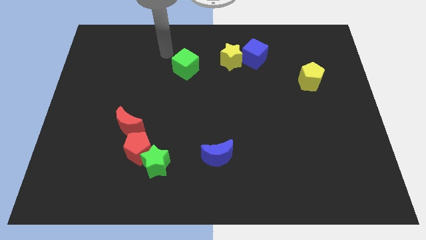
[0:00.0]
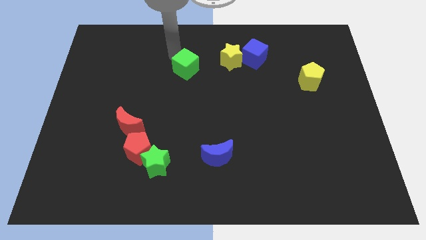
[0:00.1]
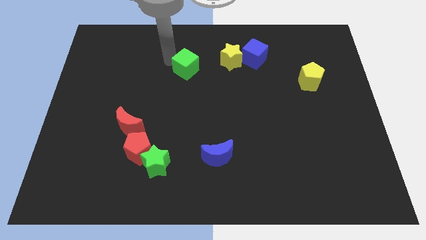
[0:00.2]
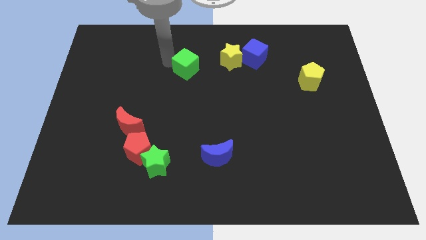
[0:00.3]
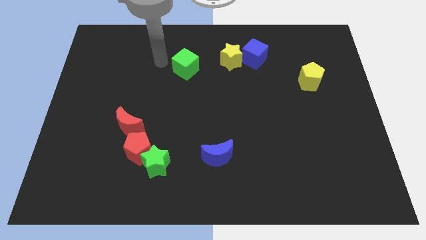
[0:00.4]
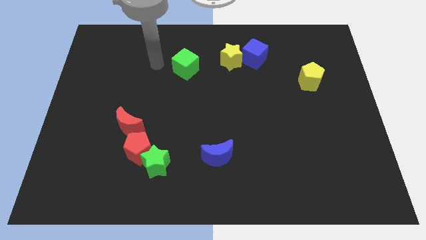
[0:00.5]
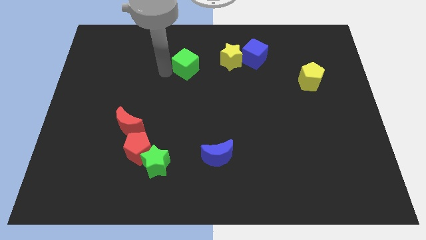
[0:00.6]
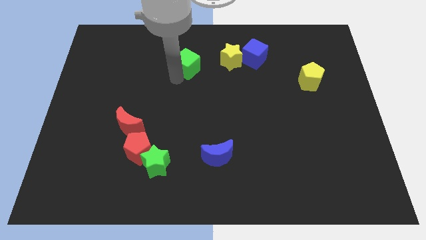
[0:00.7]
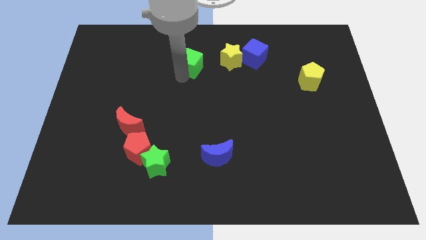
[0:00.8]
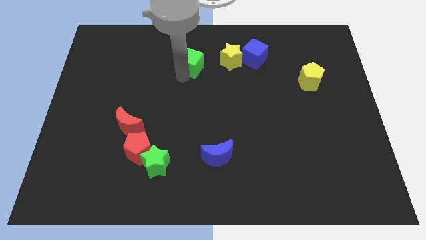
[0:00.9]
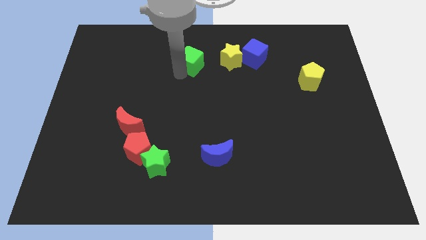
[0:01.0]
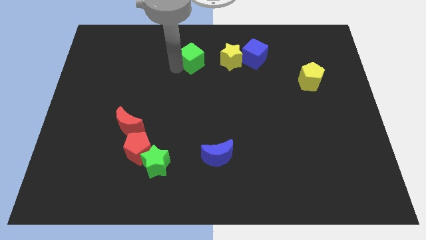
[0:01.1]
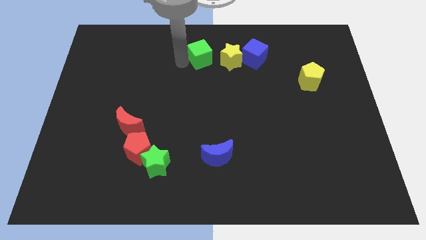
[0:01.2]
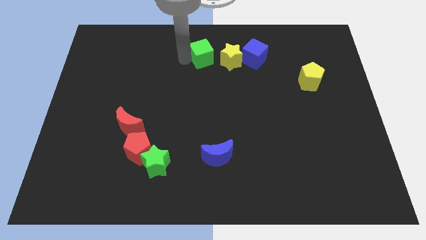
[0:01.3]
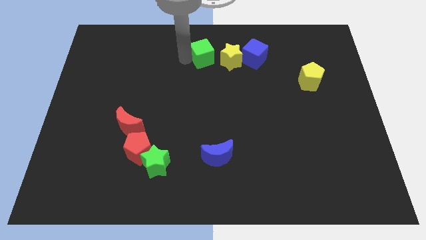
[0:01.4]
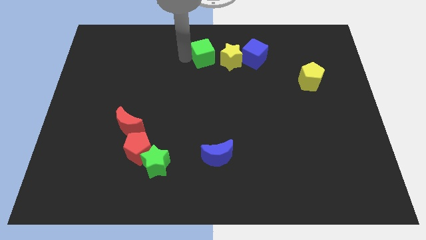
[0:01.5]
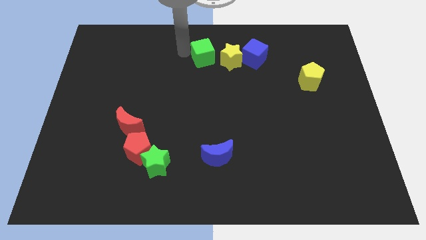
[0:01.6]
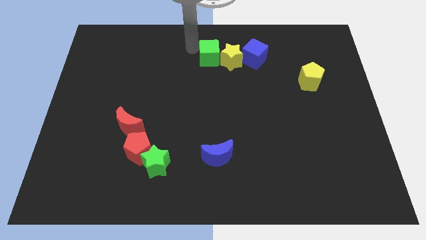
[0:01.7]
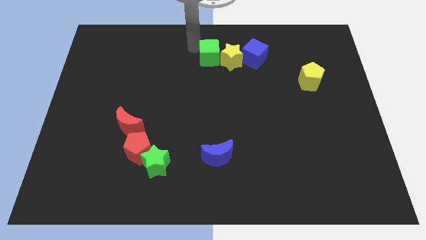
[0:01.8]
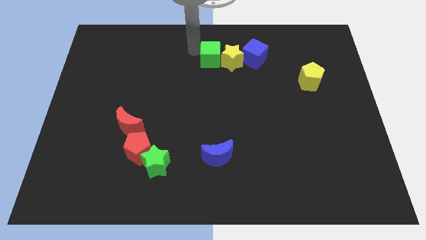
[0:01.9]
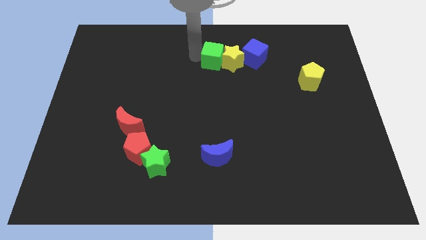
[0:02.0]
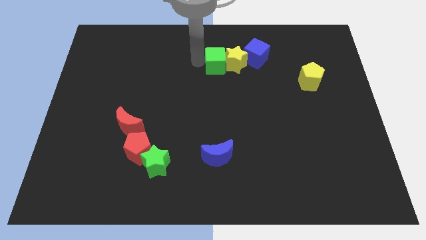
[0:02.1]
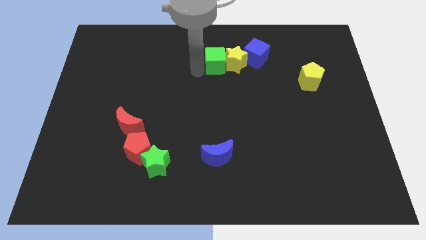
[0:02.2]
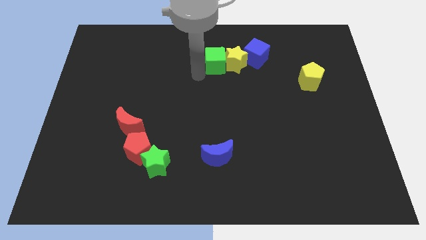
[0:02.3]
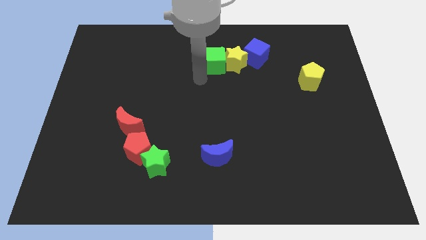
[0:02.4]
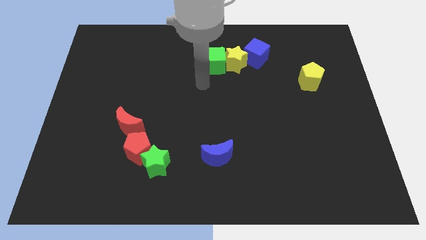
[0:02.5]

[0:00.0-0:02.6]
move the green cube into the yellow star

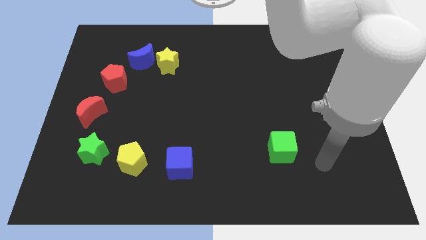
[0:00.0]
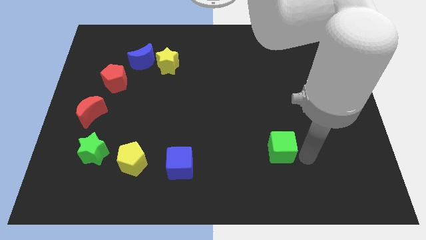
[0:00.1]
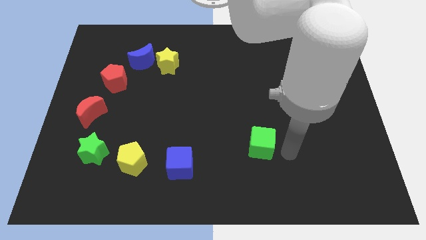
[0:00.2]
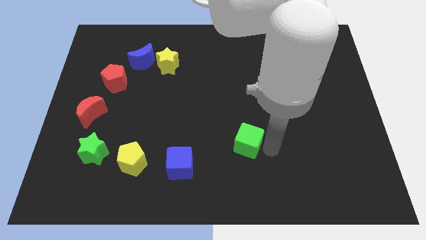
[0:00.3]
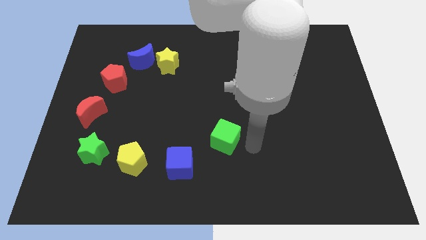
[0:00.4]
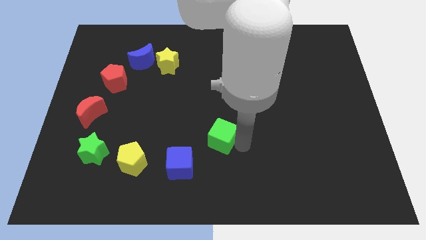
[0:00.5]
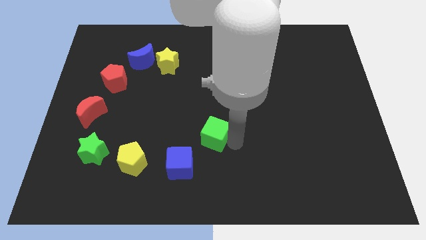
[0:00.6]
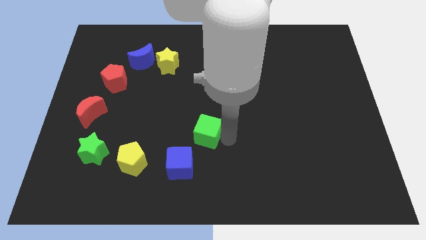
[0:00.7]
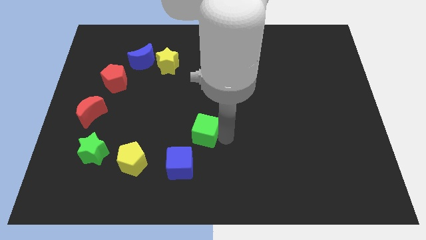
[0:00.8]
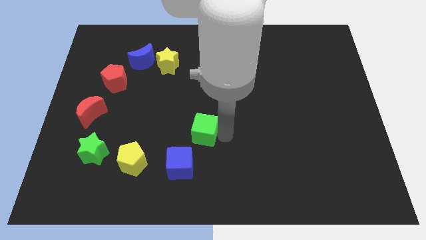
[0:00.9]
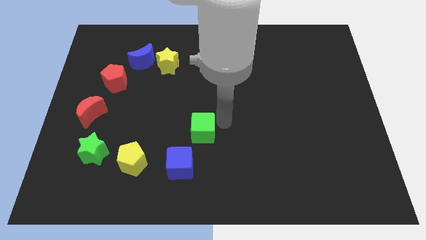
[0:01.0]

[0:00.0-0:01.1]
move the green cube towards the blue cube

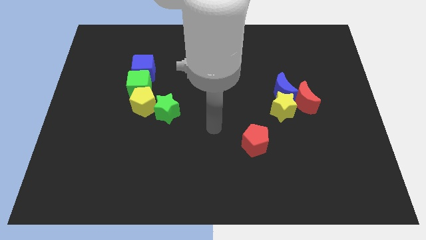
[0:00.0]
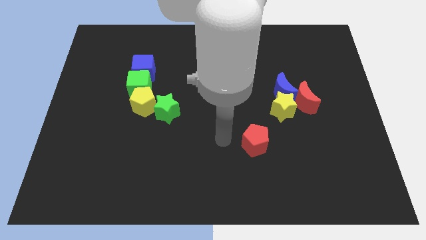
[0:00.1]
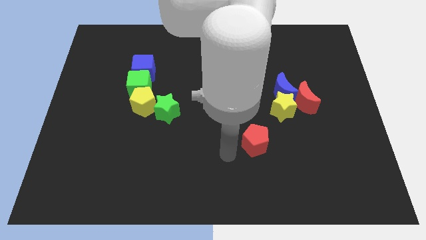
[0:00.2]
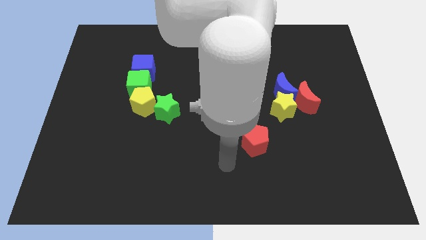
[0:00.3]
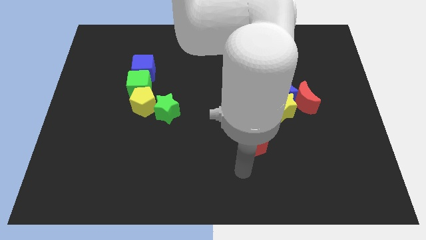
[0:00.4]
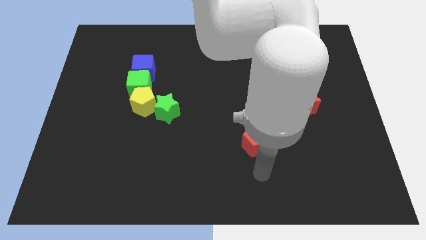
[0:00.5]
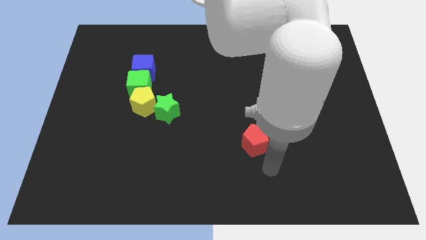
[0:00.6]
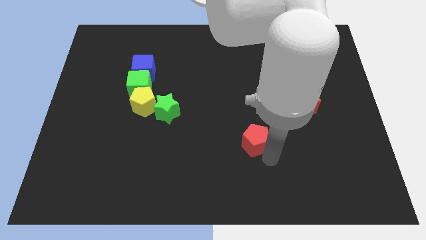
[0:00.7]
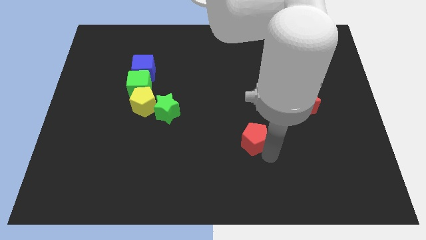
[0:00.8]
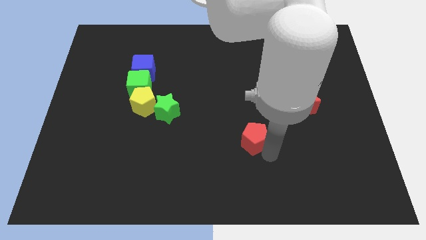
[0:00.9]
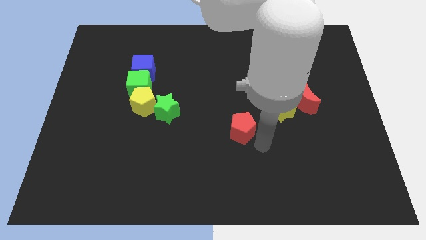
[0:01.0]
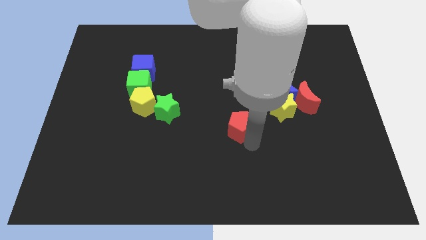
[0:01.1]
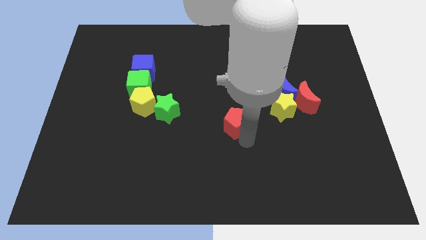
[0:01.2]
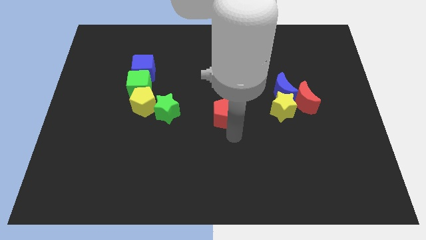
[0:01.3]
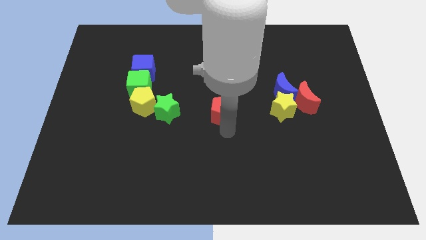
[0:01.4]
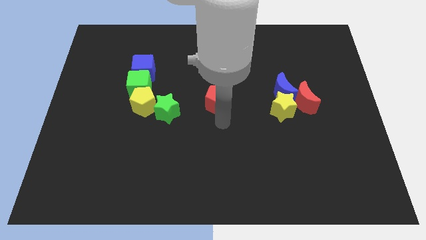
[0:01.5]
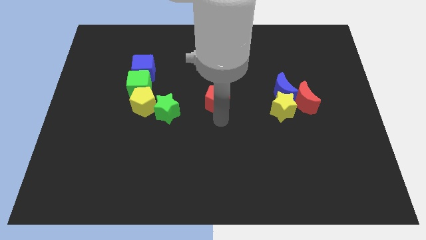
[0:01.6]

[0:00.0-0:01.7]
push the red pentagon towards the center of the board

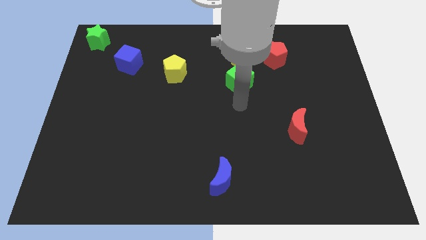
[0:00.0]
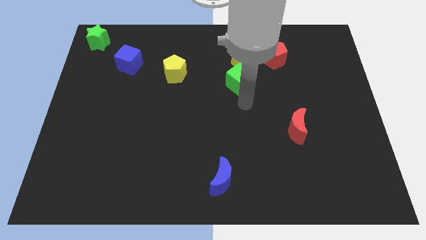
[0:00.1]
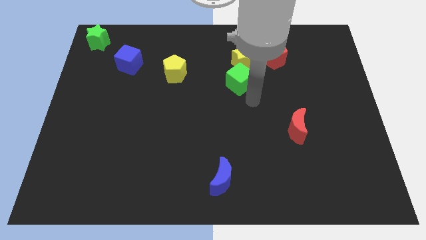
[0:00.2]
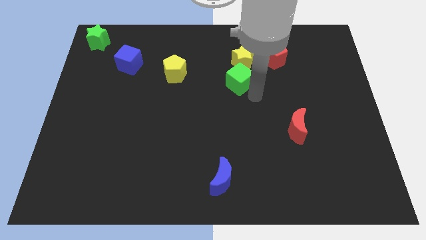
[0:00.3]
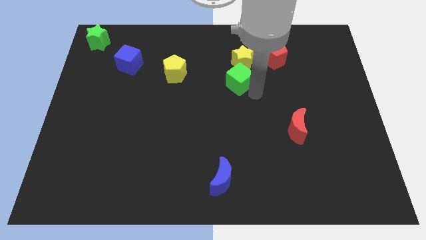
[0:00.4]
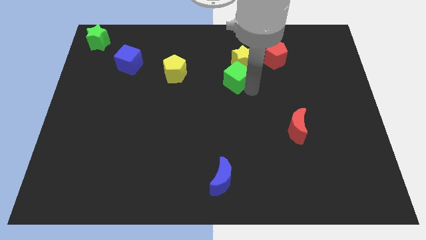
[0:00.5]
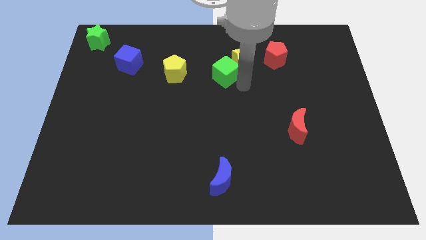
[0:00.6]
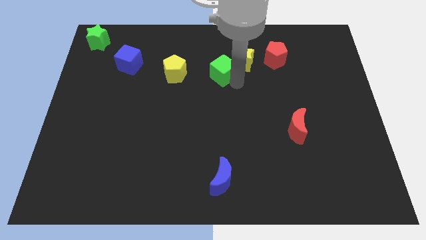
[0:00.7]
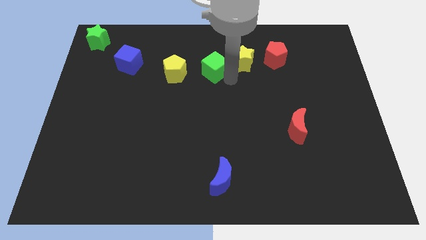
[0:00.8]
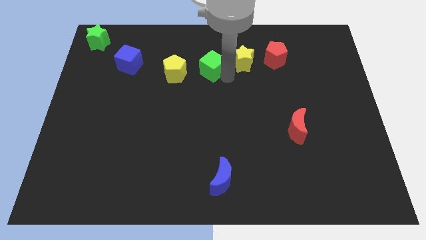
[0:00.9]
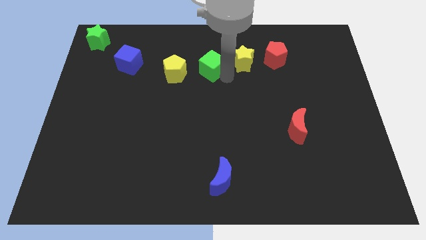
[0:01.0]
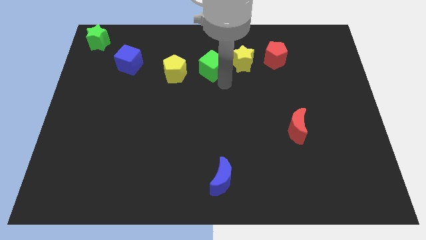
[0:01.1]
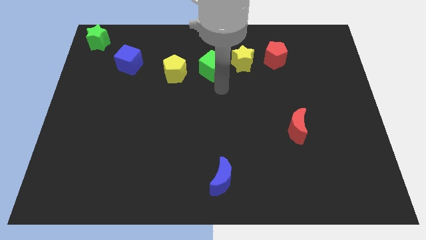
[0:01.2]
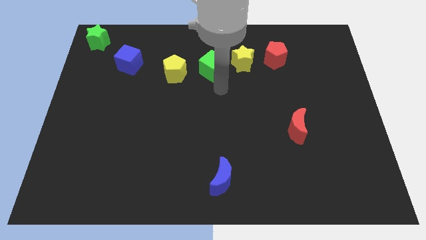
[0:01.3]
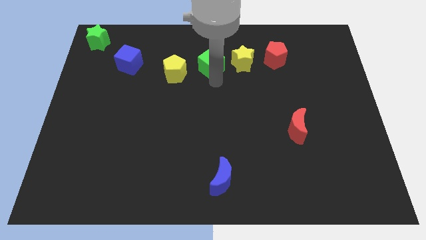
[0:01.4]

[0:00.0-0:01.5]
place the green cube in between yellow pentagon and yellow star

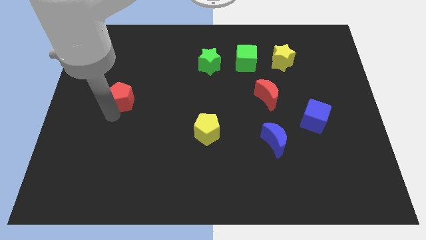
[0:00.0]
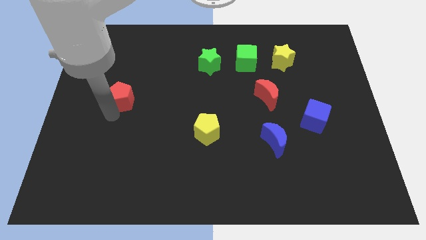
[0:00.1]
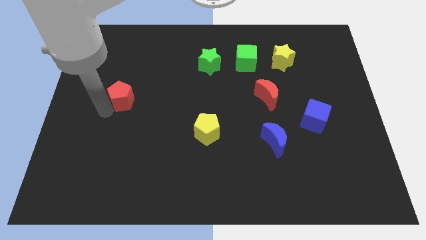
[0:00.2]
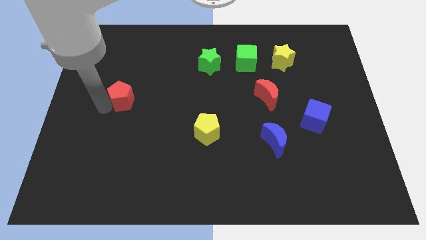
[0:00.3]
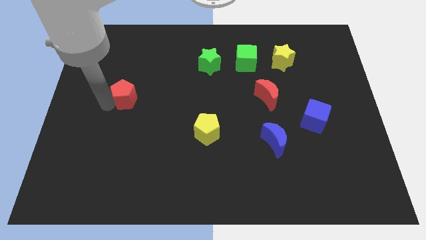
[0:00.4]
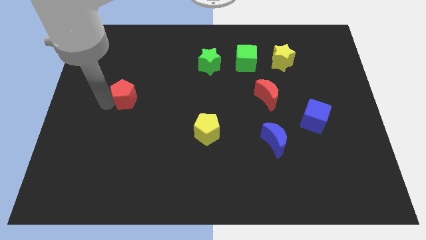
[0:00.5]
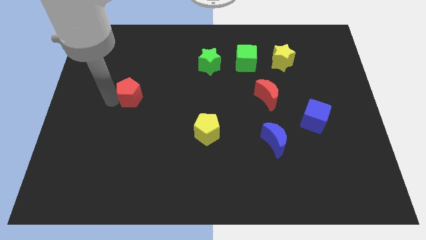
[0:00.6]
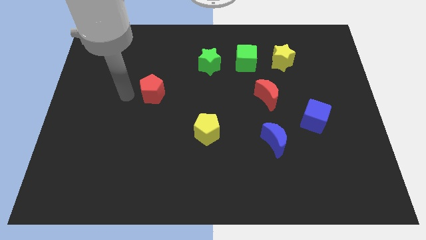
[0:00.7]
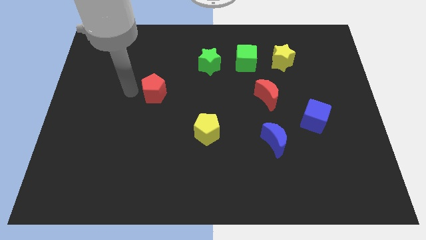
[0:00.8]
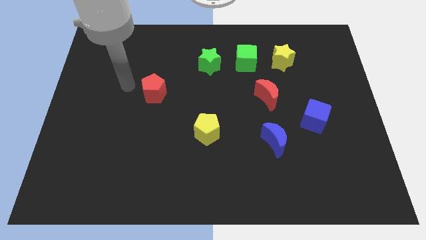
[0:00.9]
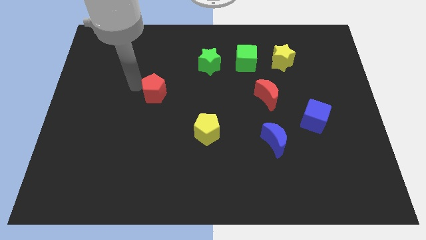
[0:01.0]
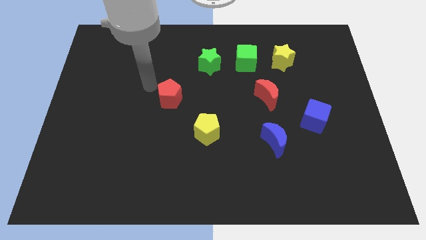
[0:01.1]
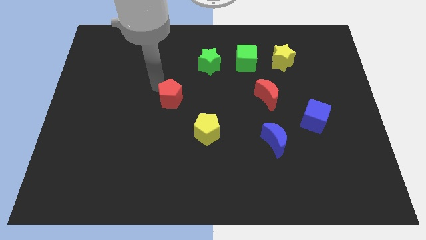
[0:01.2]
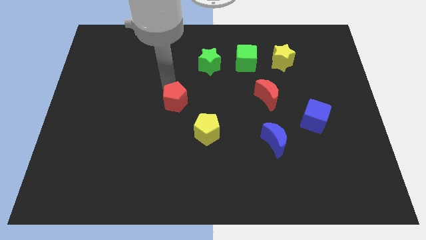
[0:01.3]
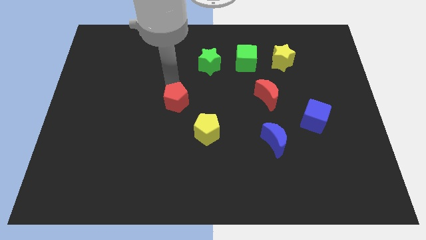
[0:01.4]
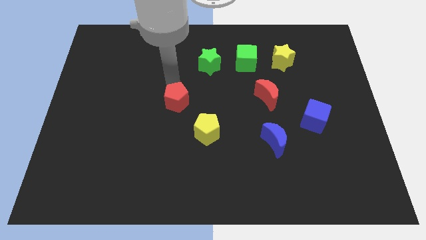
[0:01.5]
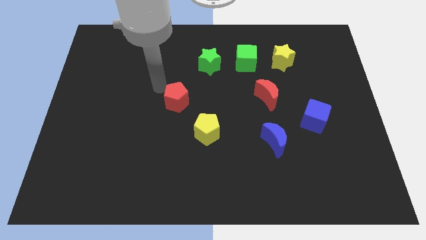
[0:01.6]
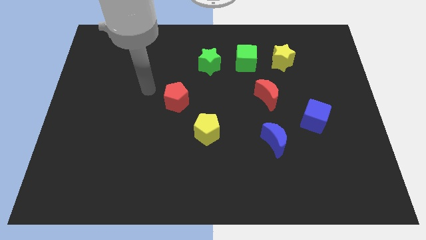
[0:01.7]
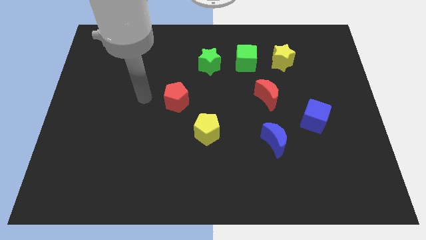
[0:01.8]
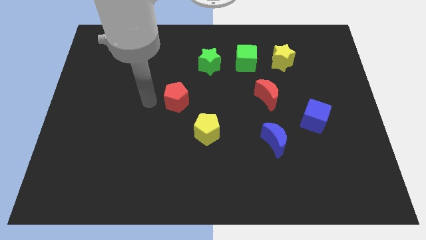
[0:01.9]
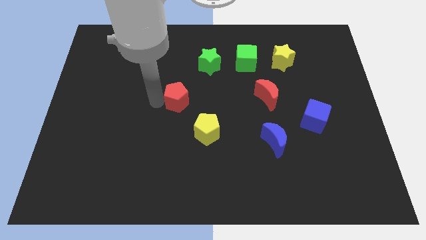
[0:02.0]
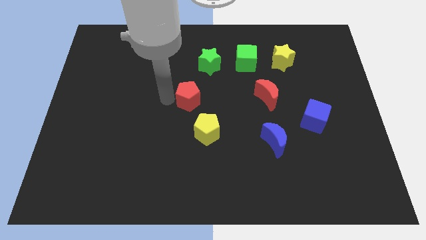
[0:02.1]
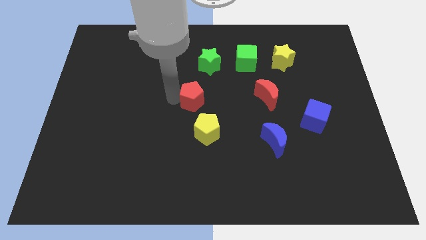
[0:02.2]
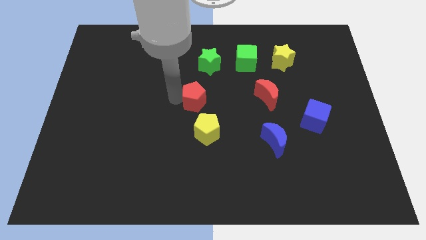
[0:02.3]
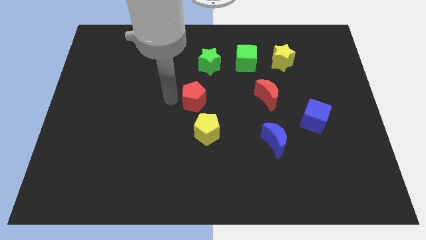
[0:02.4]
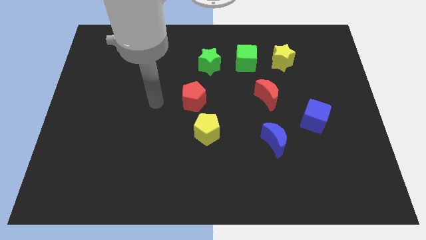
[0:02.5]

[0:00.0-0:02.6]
place the red pentagon parallel to red moon
